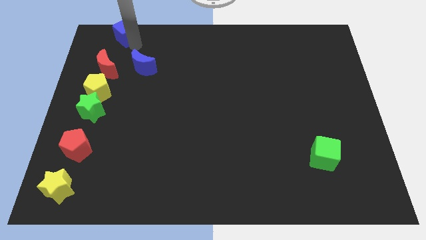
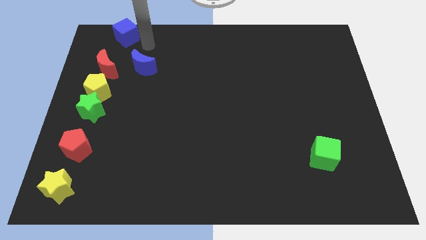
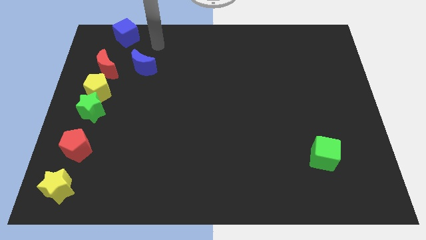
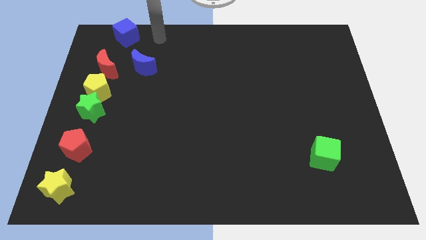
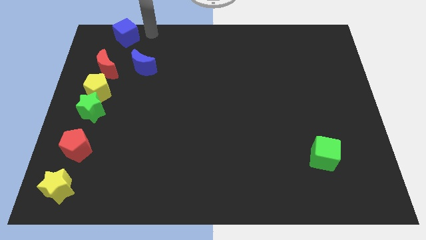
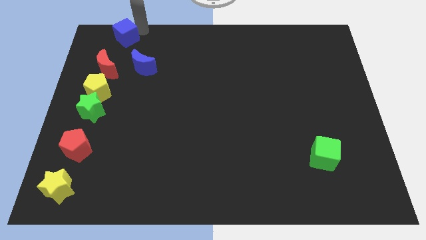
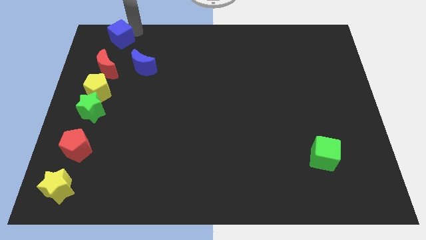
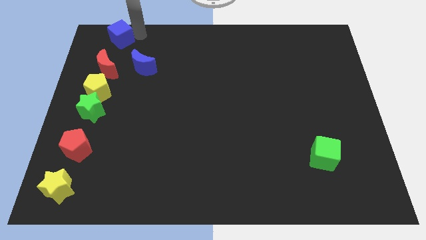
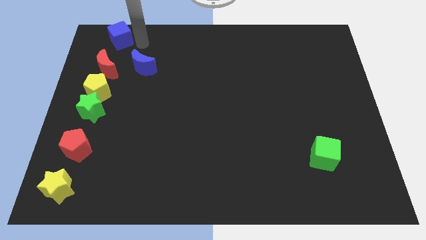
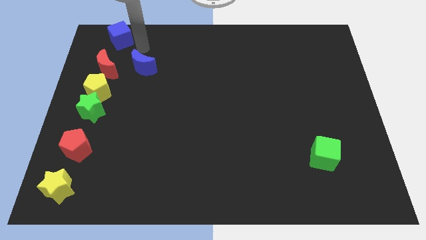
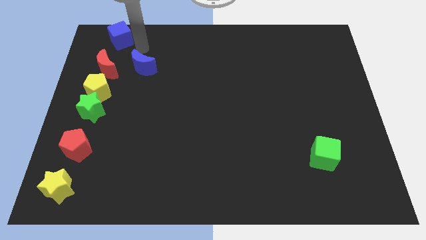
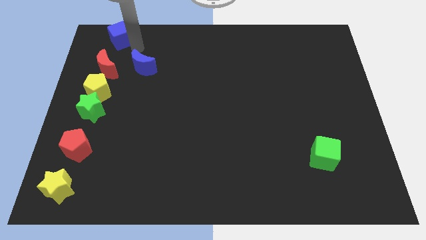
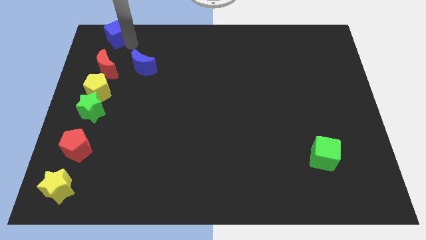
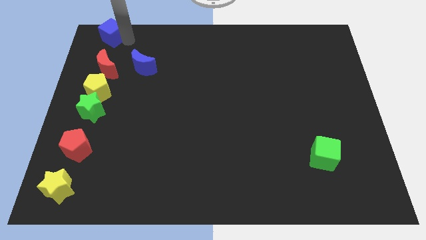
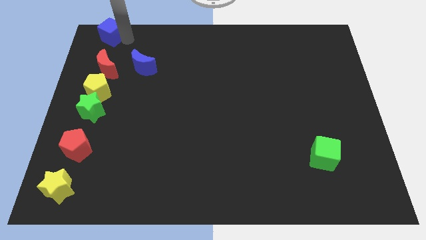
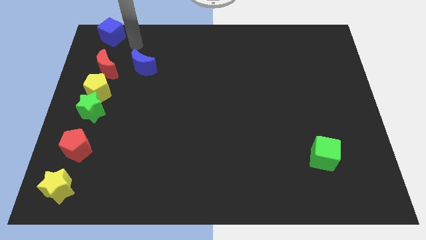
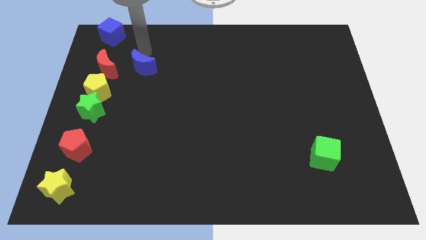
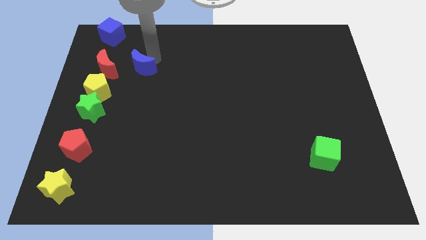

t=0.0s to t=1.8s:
move the blue cube above the red moon

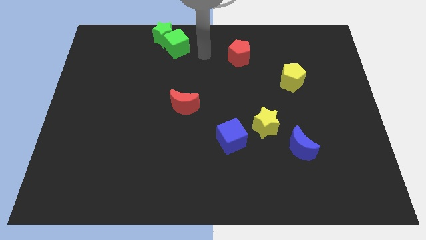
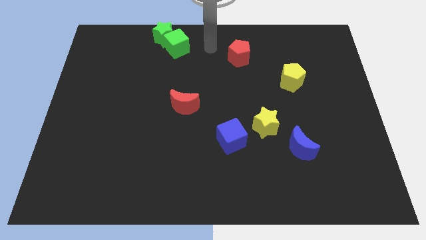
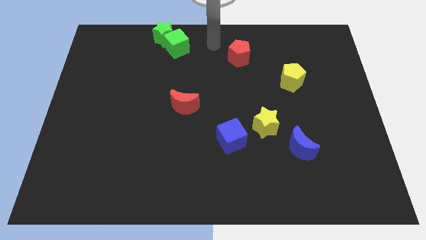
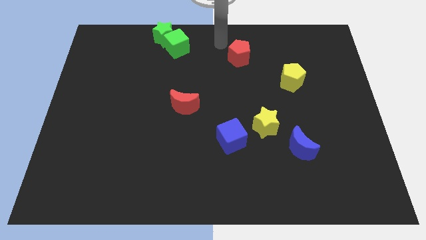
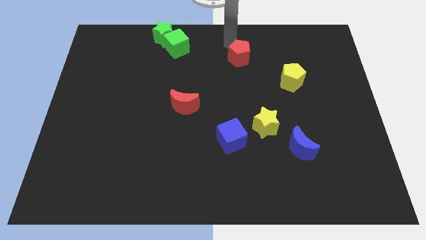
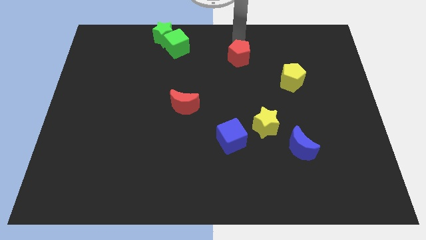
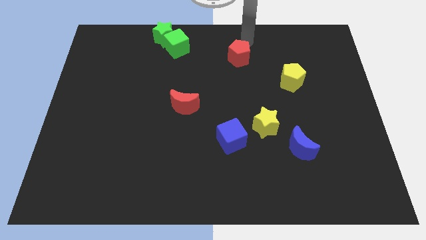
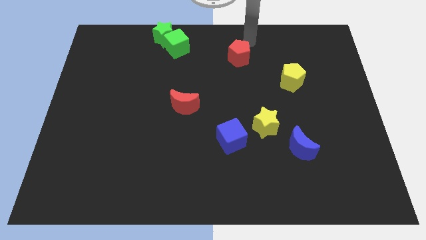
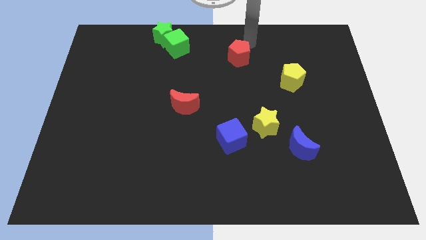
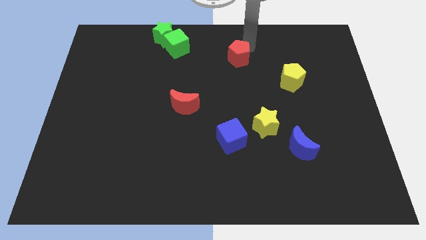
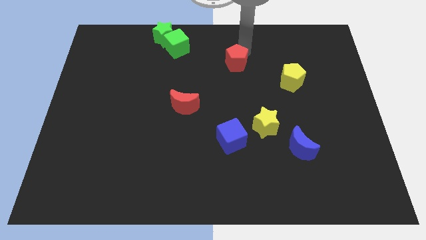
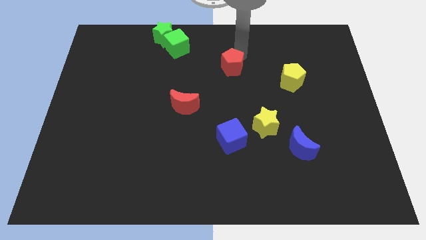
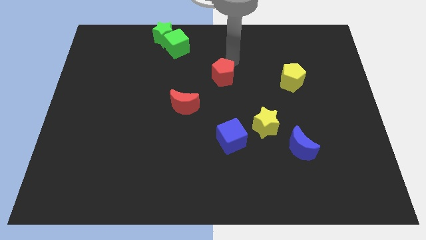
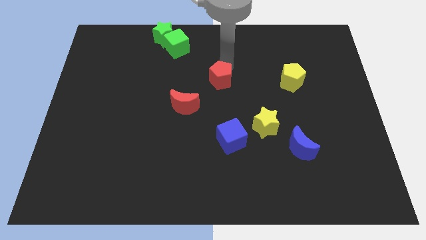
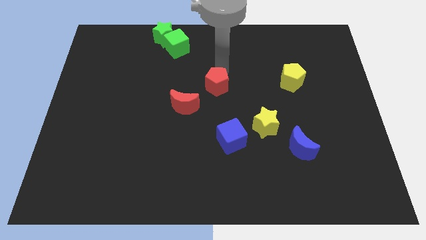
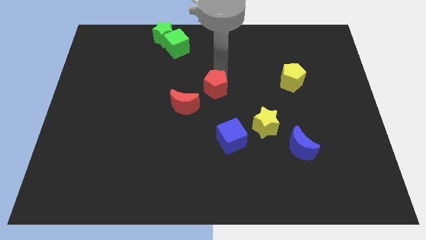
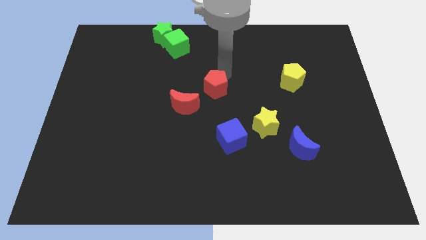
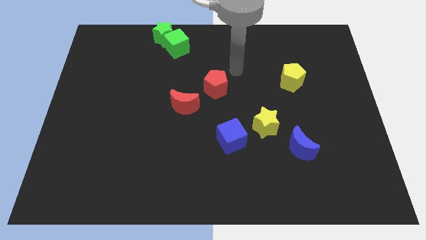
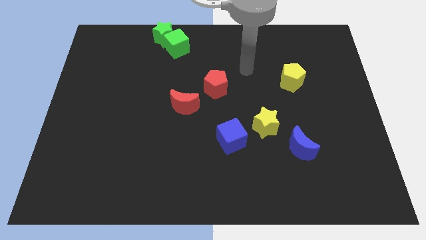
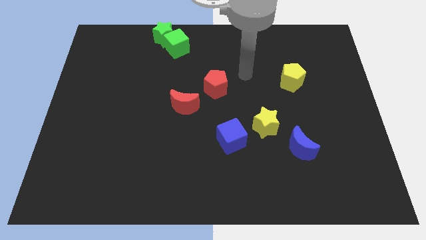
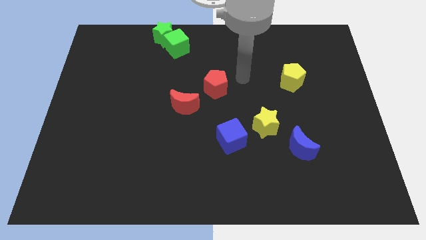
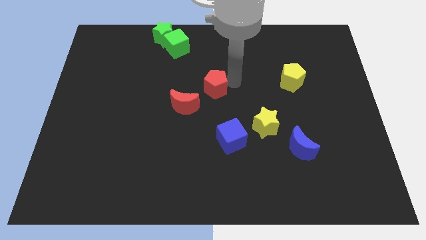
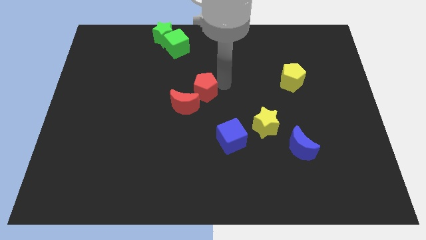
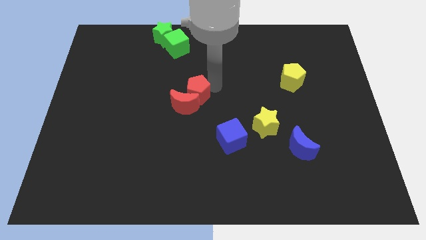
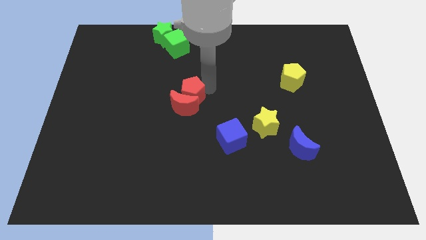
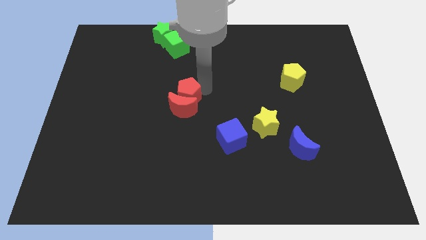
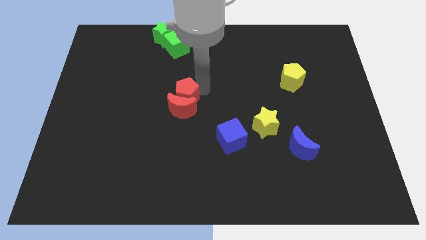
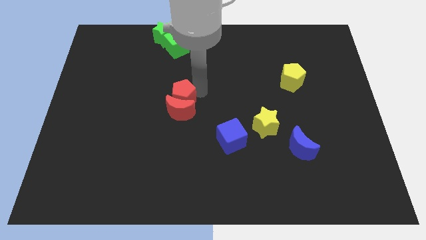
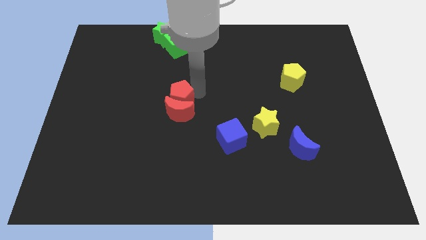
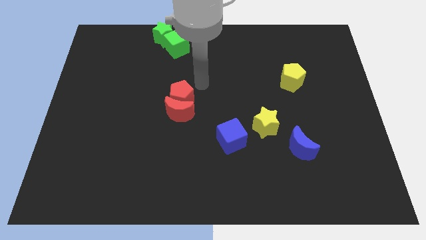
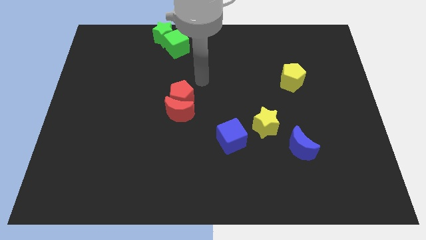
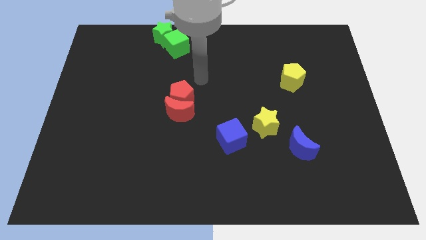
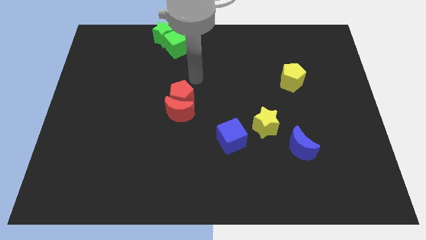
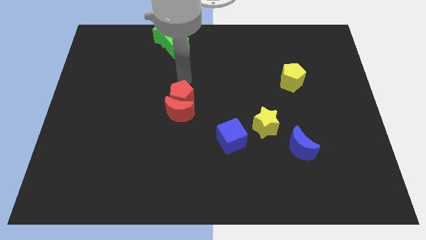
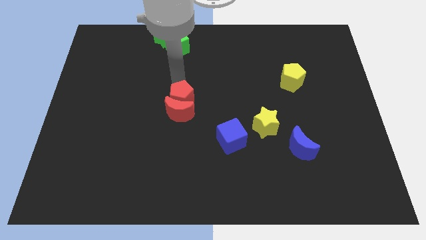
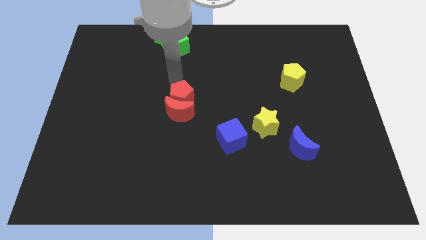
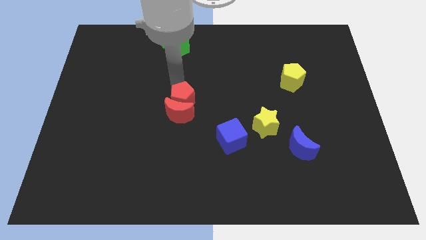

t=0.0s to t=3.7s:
move the red pentagon into the red crescent

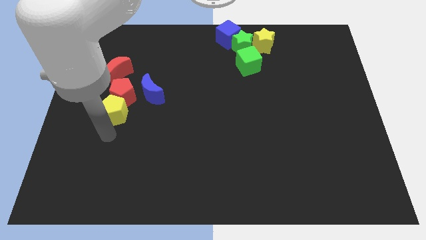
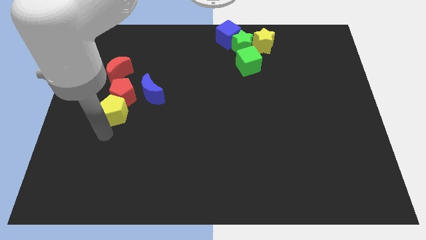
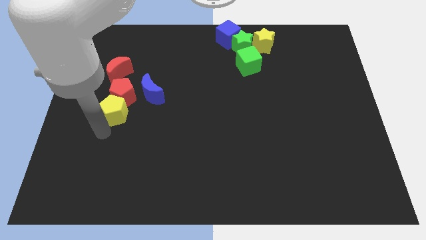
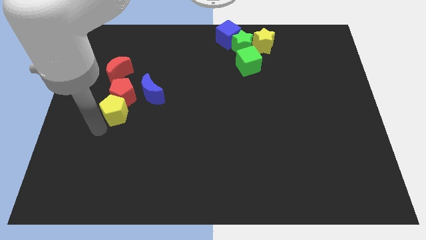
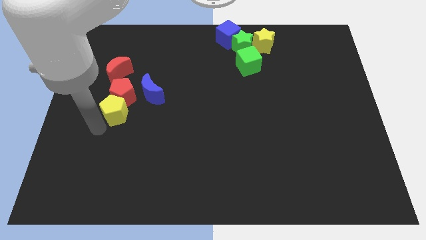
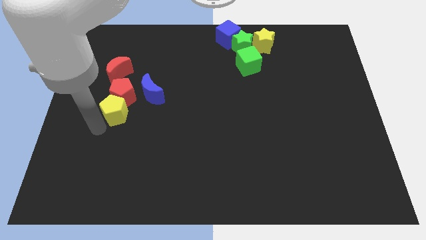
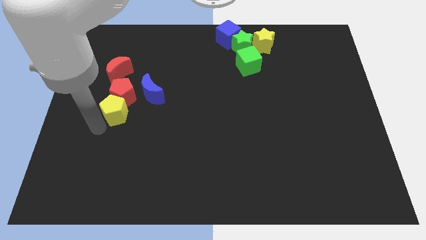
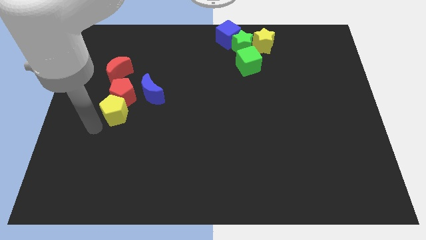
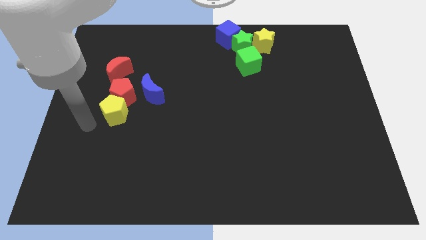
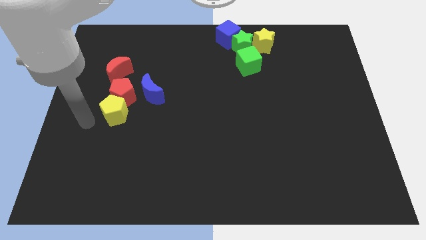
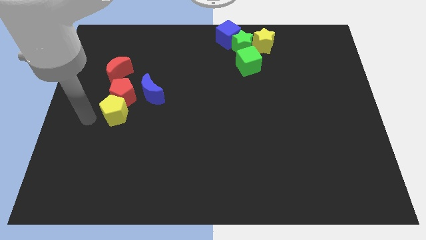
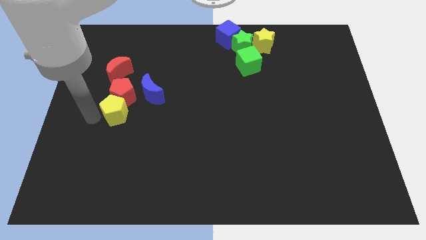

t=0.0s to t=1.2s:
move your arm towards the left of yellow pentagon

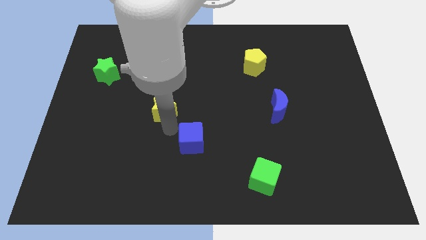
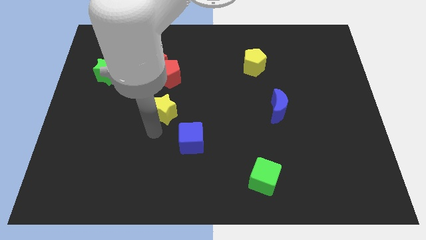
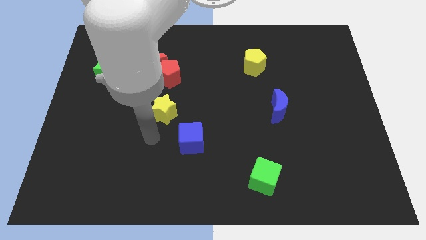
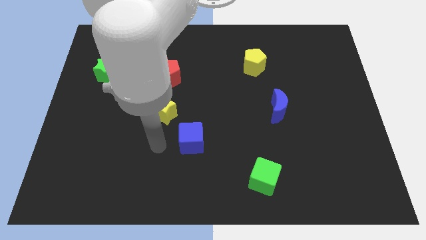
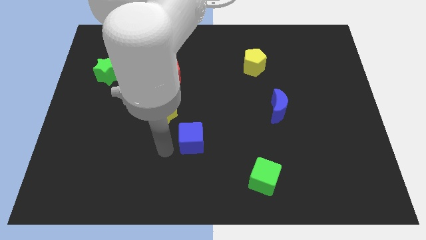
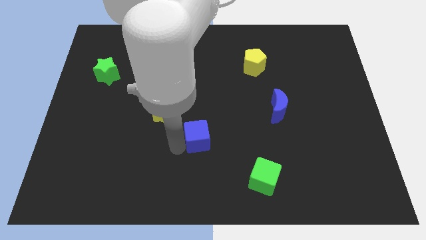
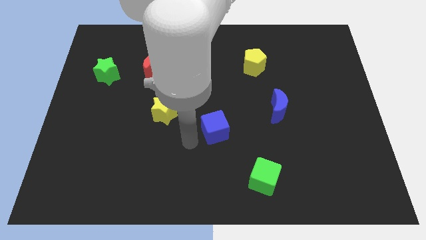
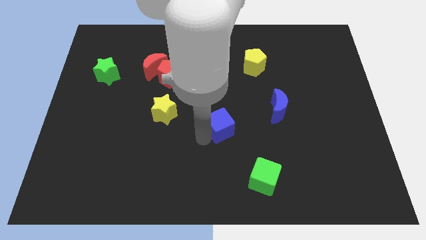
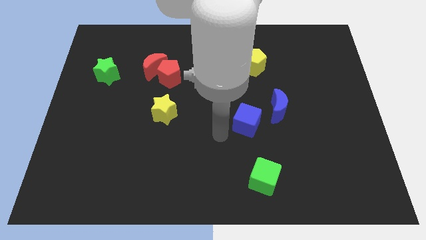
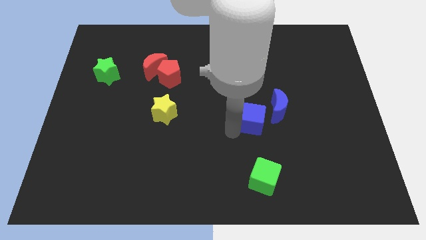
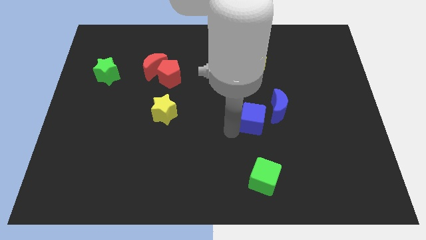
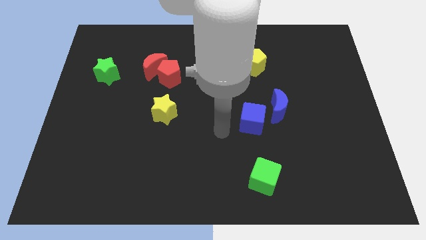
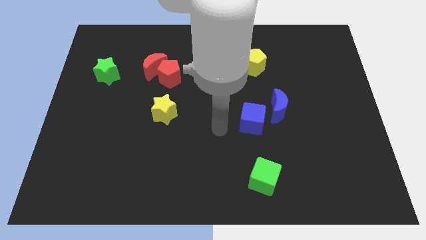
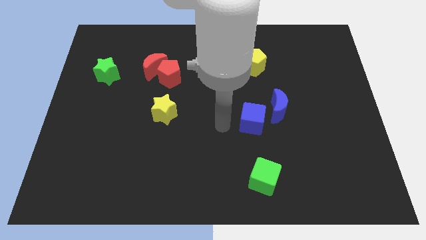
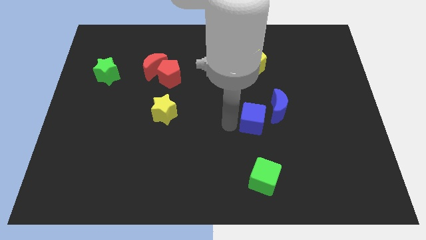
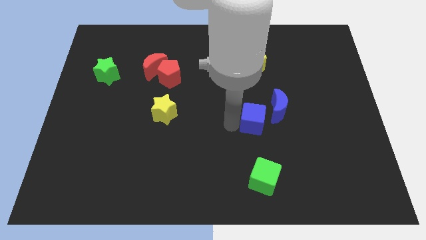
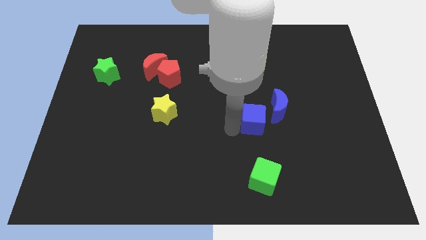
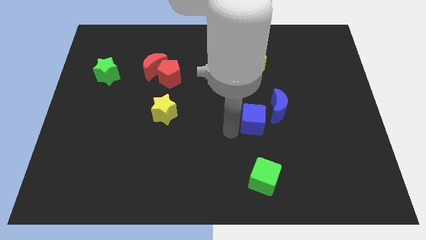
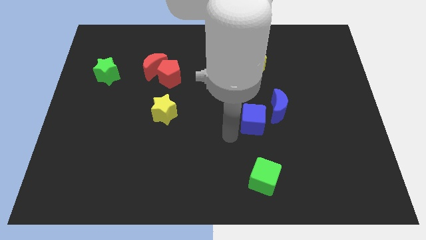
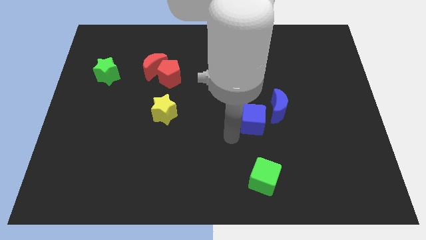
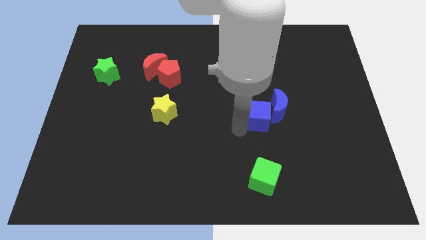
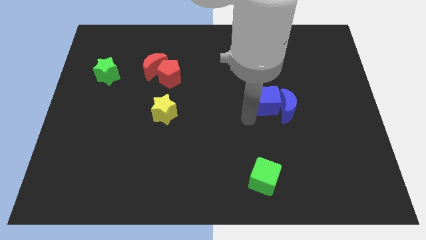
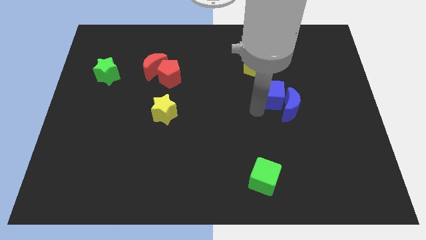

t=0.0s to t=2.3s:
push the blue cube towards the blue moon

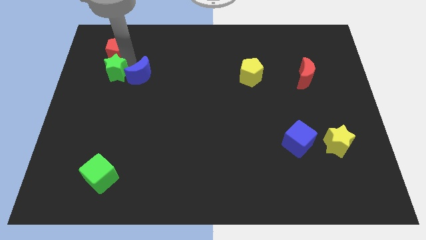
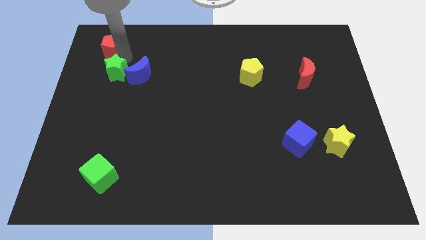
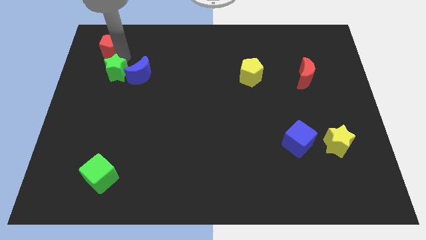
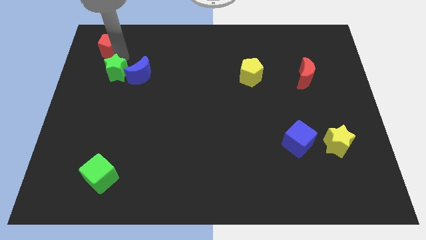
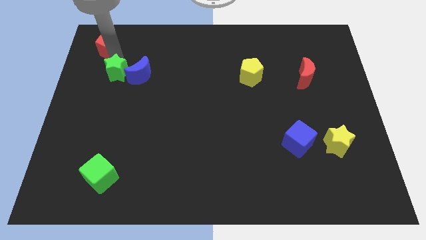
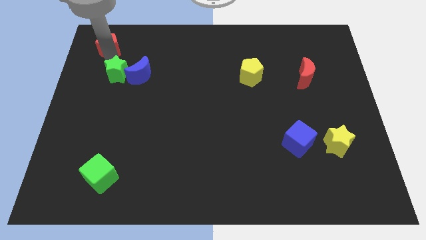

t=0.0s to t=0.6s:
place the red pentagon to the top of green star
